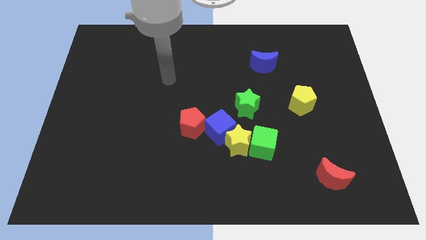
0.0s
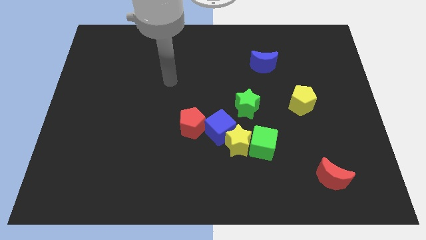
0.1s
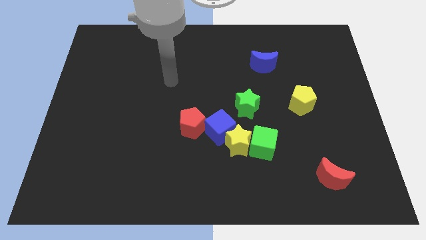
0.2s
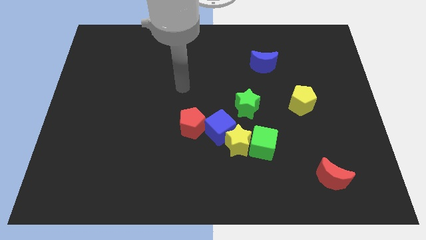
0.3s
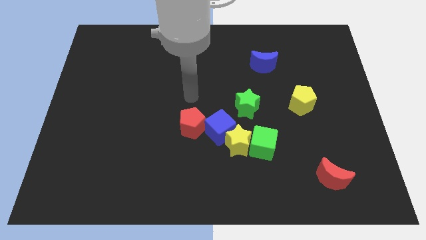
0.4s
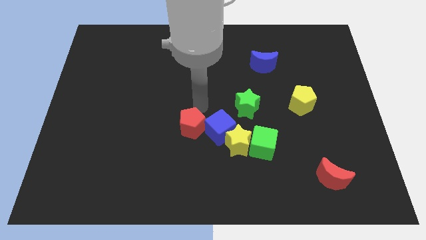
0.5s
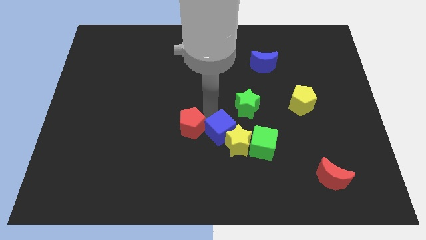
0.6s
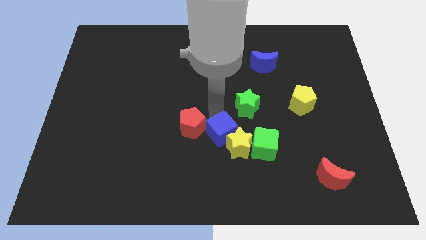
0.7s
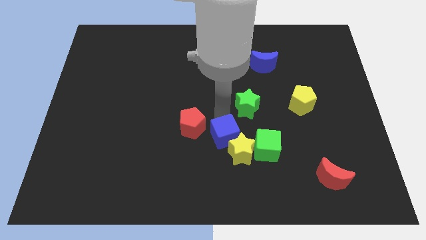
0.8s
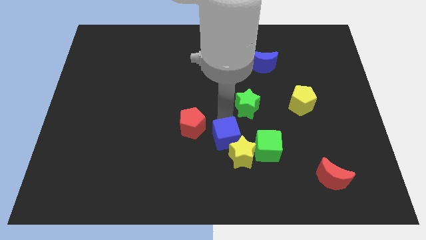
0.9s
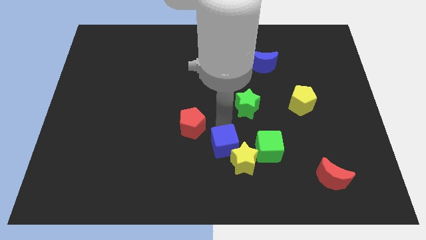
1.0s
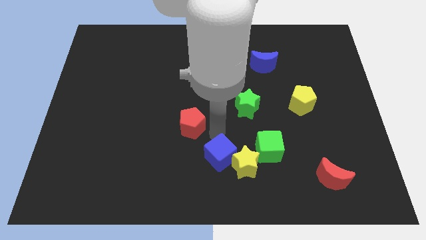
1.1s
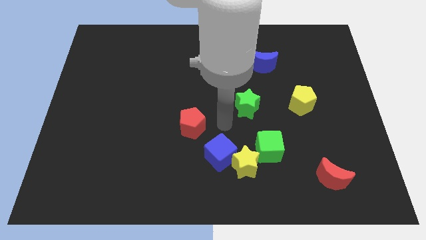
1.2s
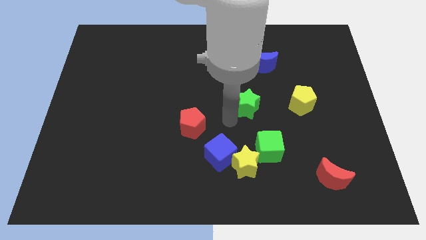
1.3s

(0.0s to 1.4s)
separate blue cube from red pentagon

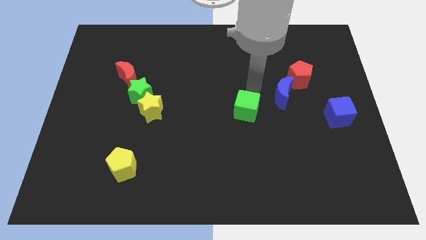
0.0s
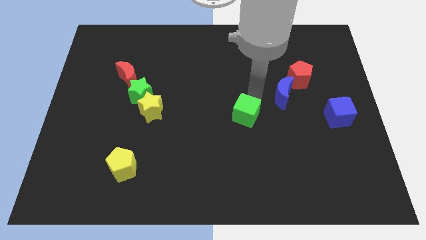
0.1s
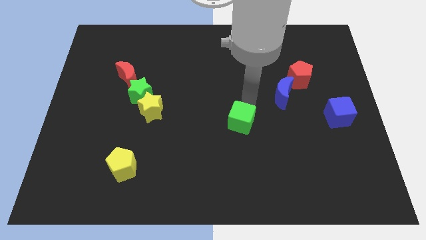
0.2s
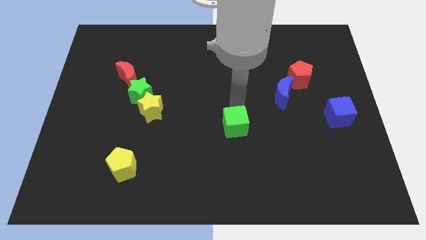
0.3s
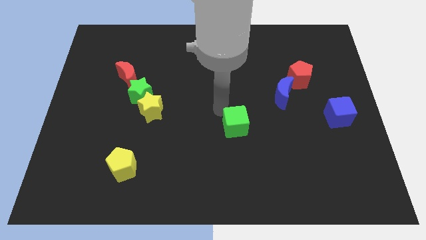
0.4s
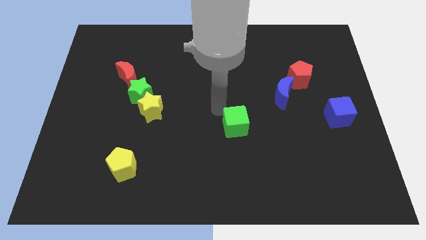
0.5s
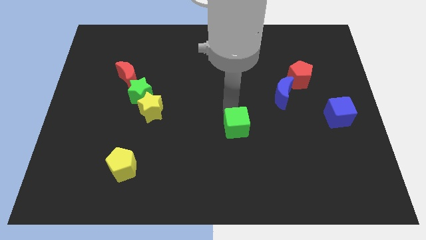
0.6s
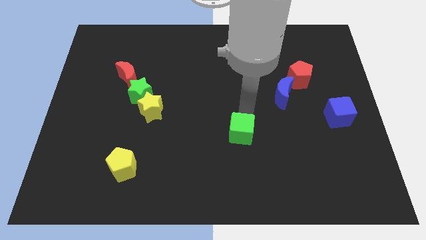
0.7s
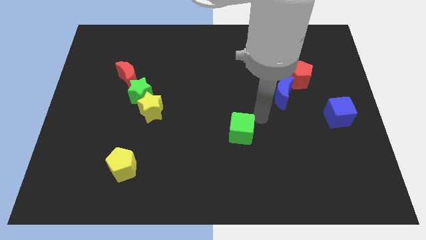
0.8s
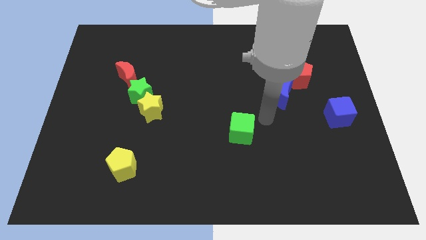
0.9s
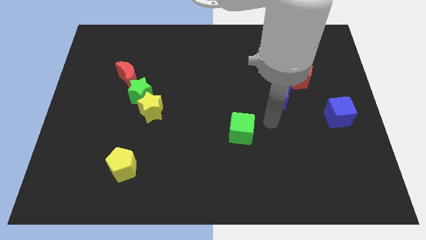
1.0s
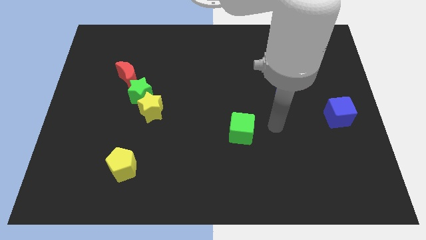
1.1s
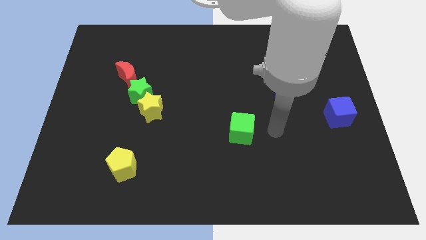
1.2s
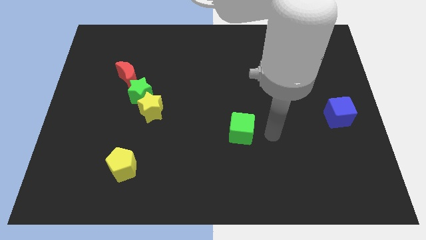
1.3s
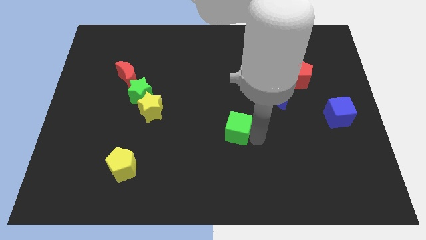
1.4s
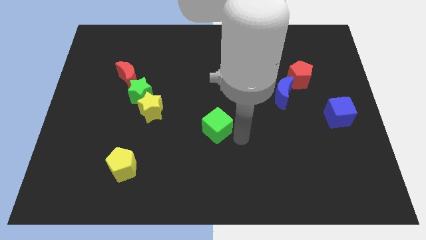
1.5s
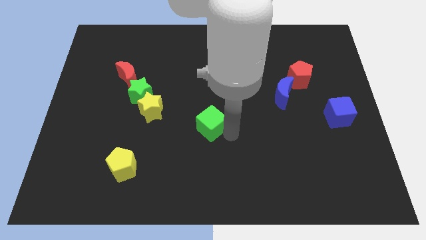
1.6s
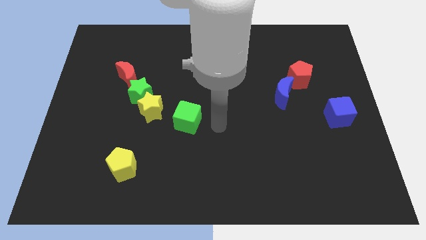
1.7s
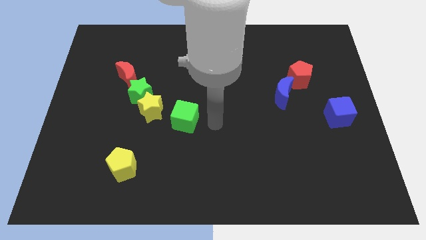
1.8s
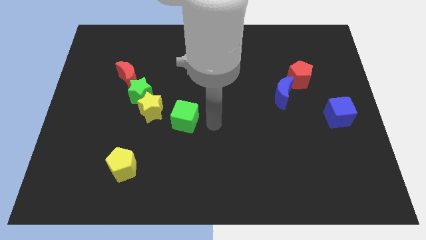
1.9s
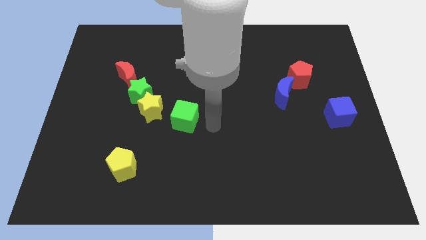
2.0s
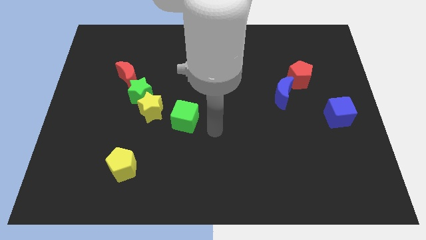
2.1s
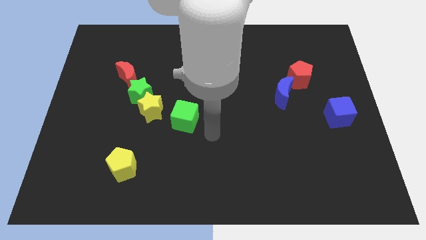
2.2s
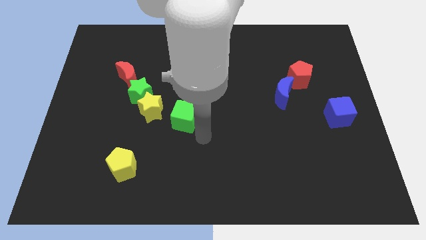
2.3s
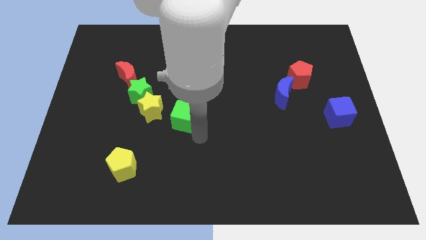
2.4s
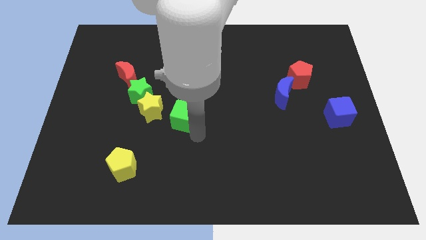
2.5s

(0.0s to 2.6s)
move the green cube to the bottom right of the yellow star

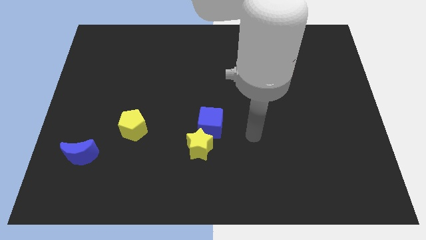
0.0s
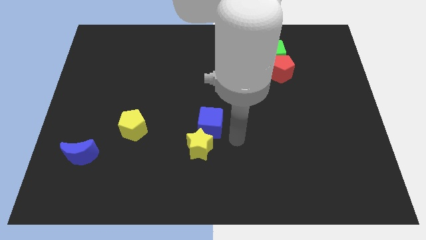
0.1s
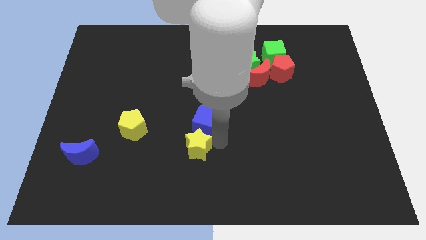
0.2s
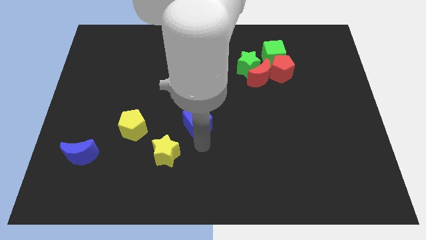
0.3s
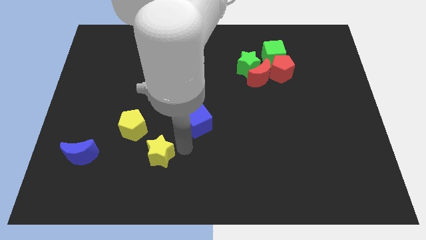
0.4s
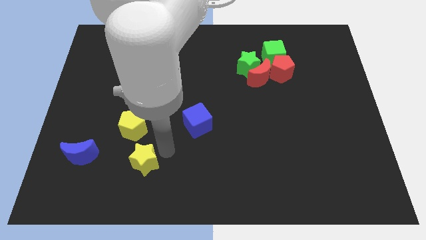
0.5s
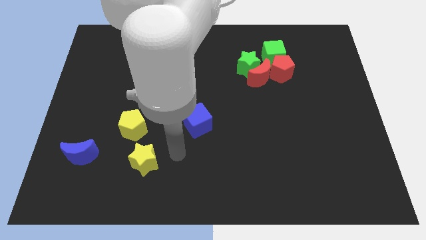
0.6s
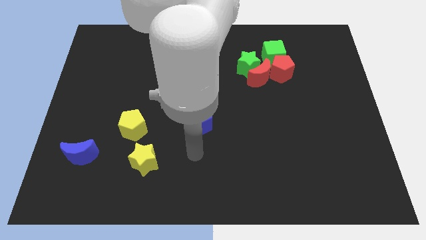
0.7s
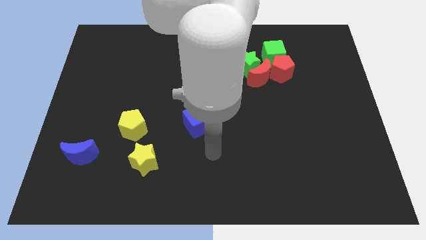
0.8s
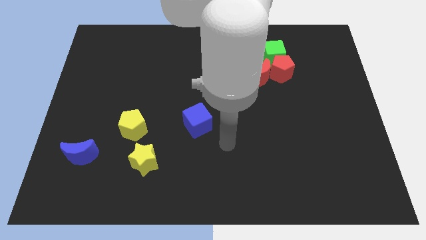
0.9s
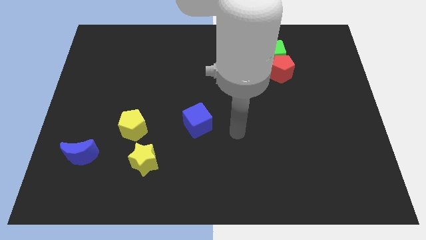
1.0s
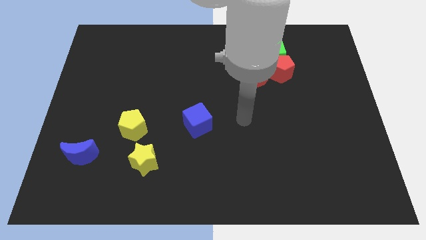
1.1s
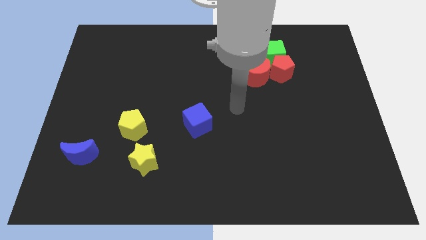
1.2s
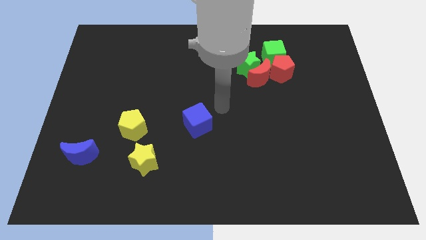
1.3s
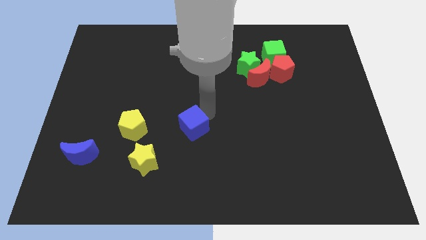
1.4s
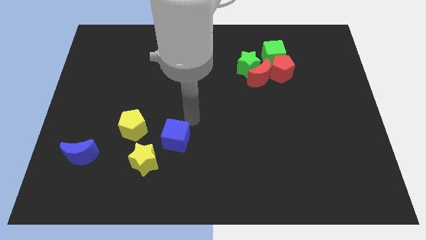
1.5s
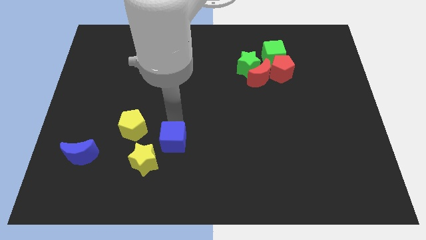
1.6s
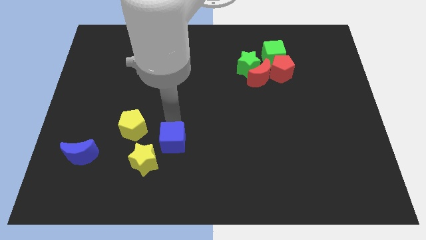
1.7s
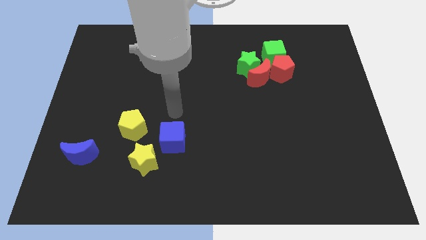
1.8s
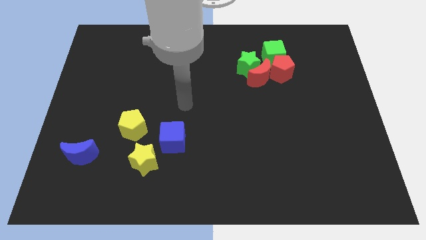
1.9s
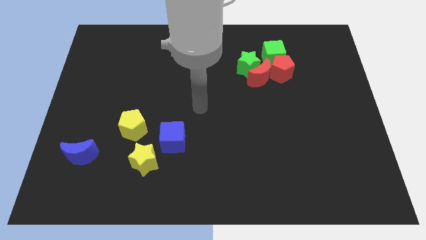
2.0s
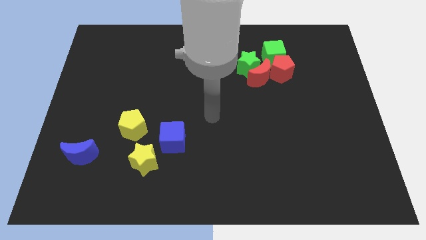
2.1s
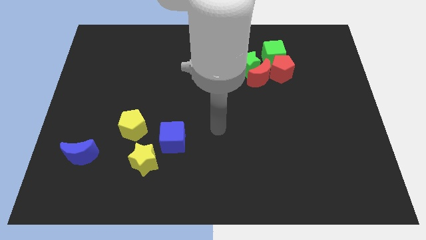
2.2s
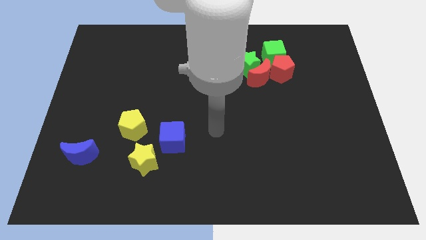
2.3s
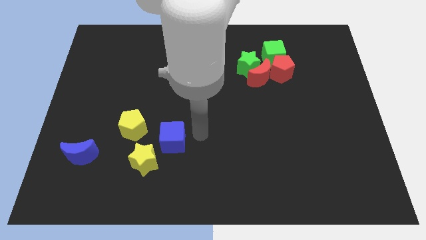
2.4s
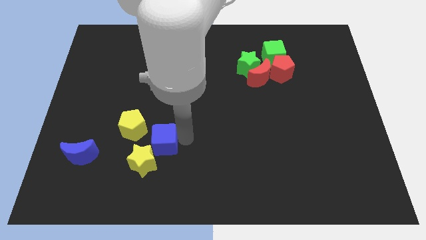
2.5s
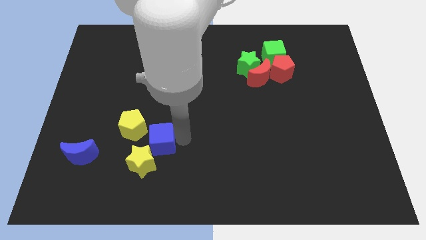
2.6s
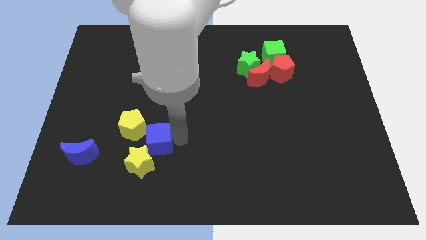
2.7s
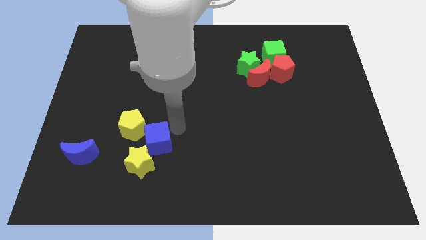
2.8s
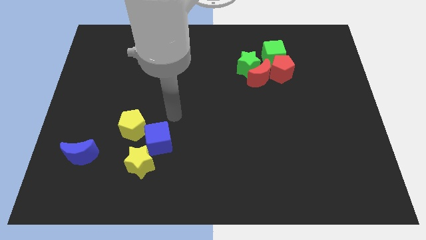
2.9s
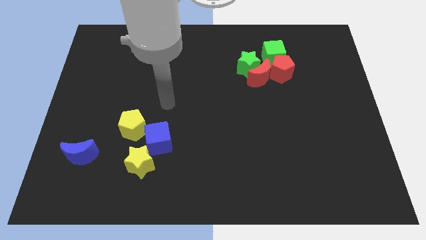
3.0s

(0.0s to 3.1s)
push the blue cube towards the yellow pentagon

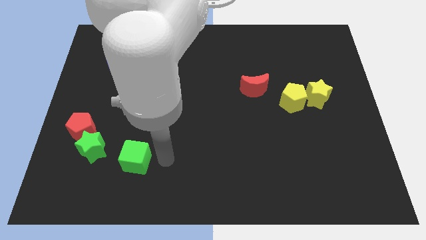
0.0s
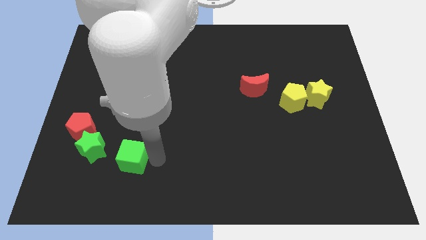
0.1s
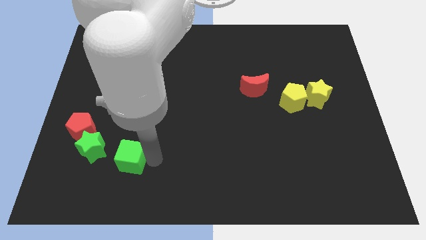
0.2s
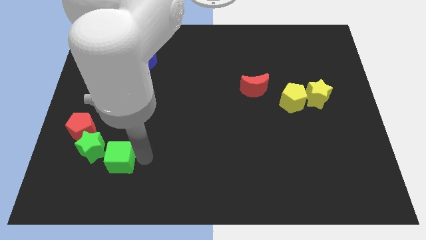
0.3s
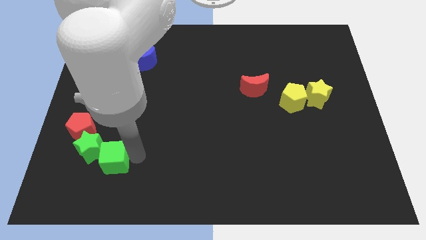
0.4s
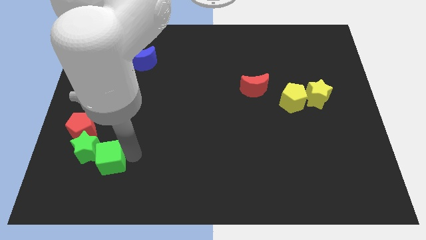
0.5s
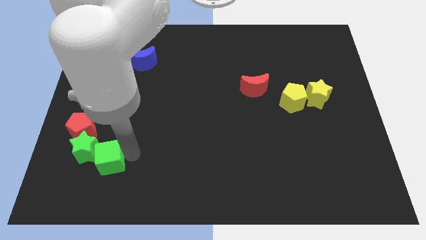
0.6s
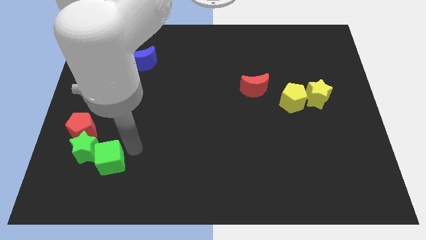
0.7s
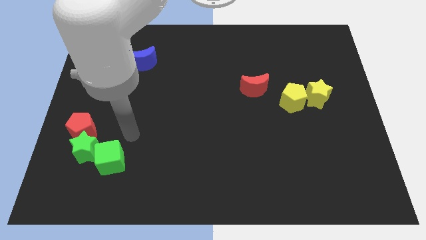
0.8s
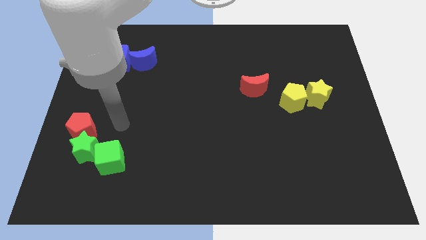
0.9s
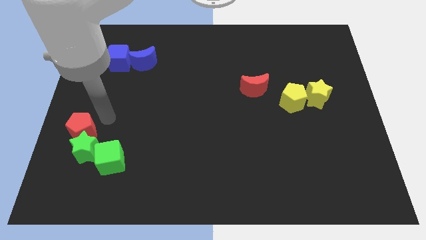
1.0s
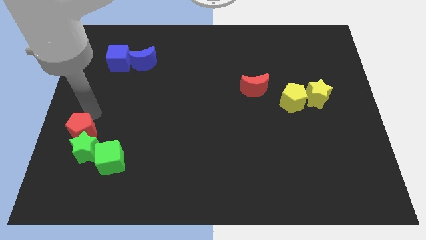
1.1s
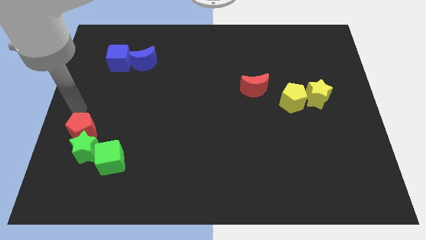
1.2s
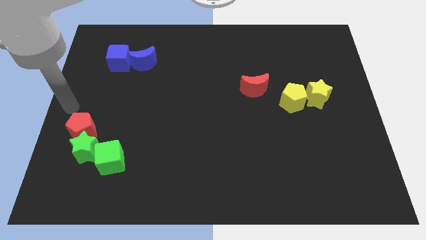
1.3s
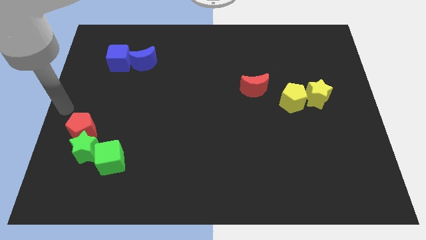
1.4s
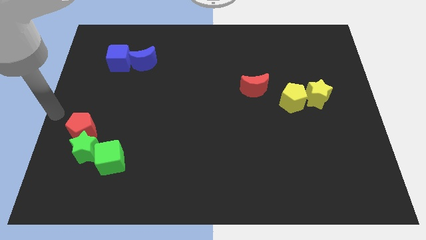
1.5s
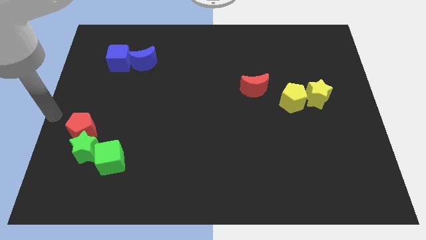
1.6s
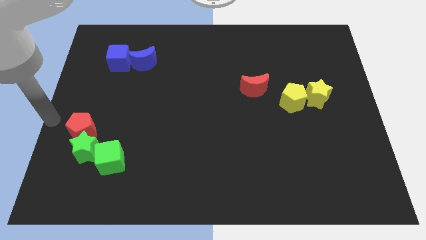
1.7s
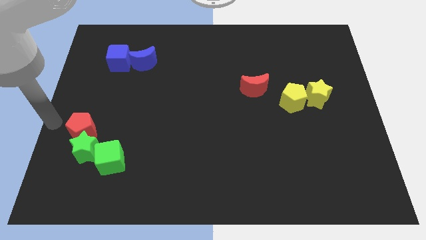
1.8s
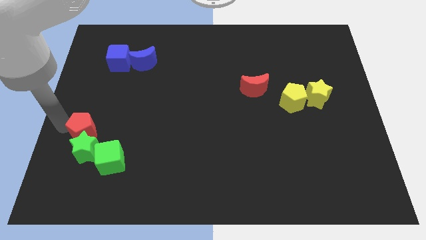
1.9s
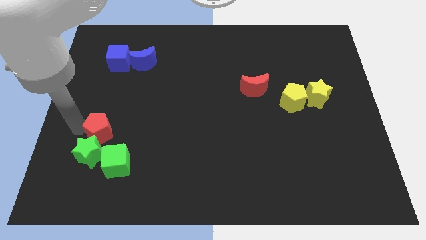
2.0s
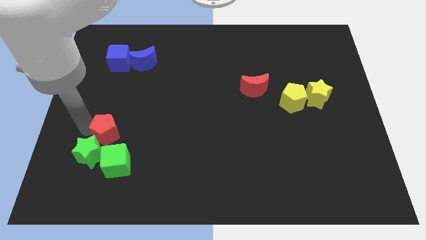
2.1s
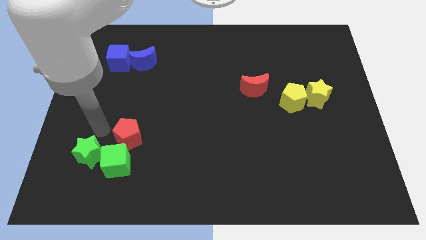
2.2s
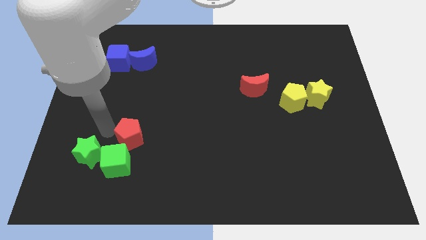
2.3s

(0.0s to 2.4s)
push red pentagon above green cube
